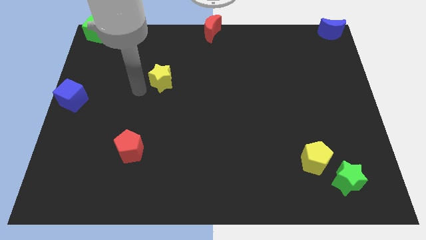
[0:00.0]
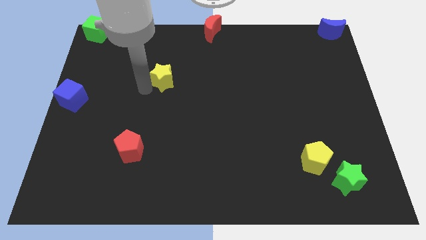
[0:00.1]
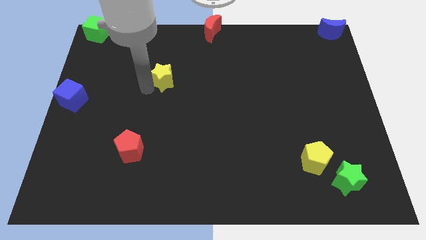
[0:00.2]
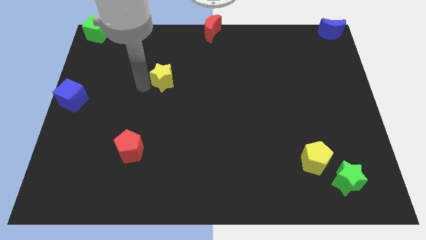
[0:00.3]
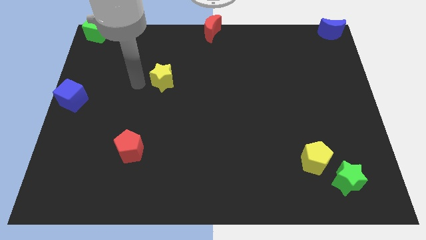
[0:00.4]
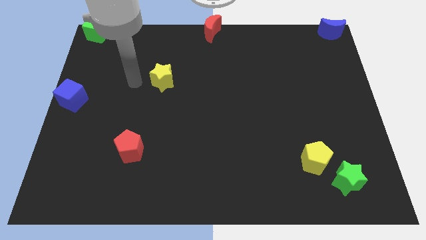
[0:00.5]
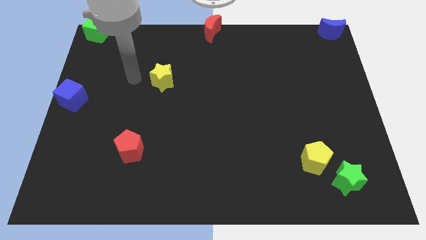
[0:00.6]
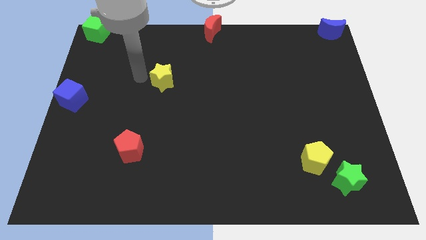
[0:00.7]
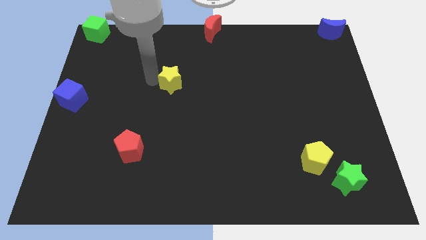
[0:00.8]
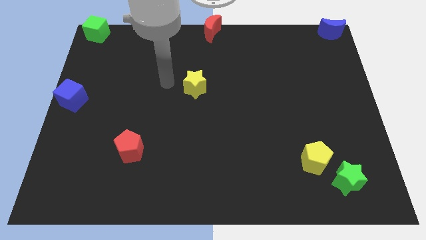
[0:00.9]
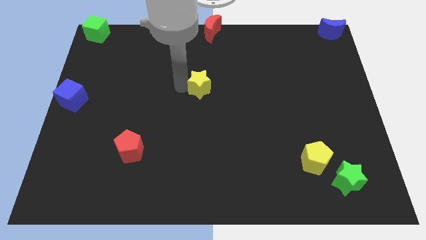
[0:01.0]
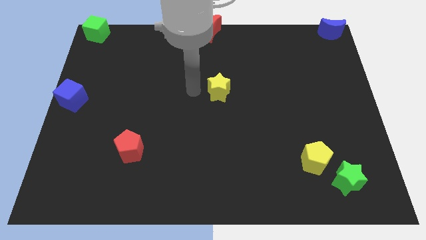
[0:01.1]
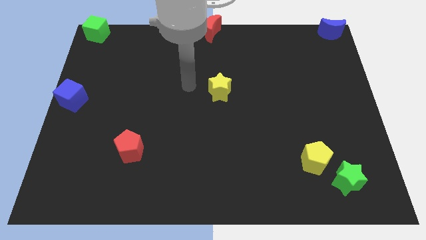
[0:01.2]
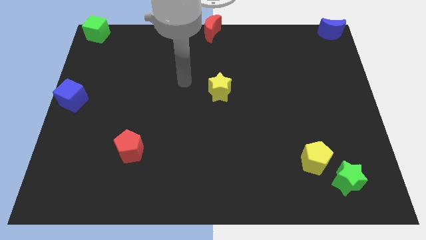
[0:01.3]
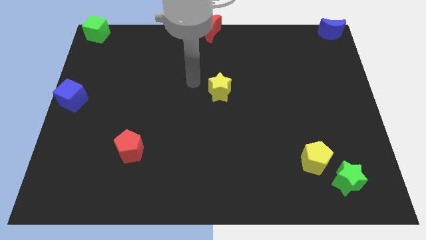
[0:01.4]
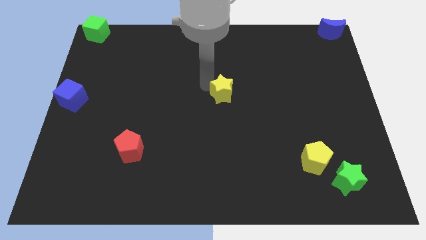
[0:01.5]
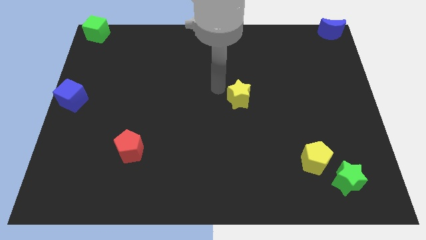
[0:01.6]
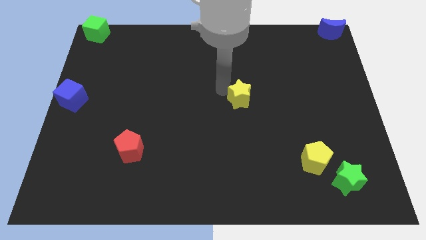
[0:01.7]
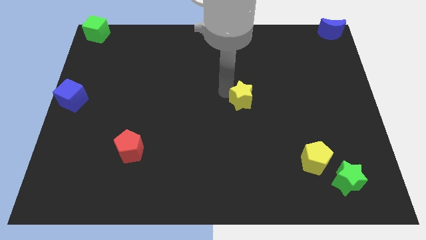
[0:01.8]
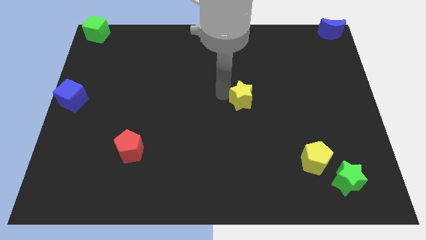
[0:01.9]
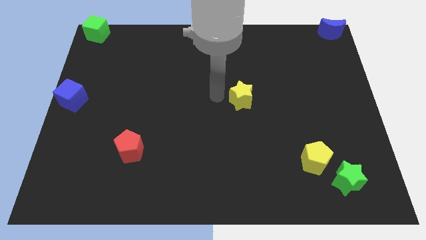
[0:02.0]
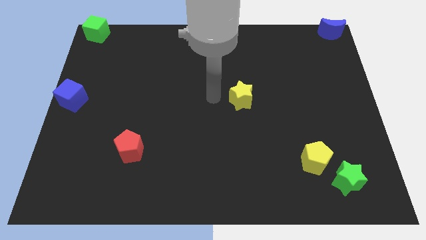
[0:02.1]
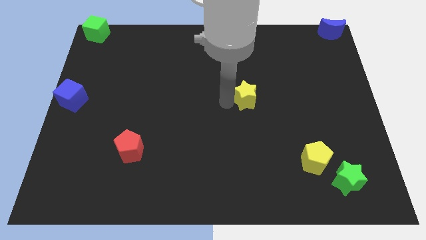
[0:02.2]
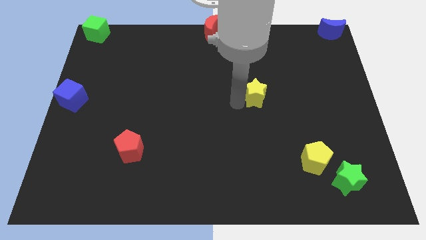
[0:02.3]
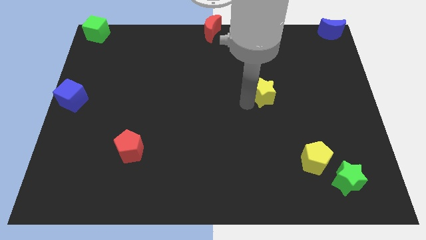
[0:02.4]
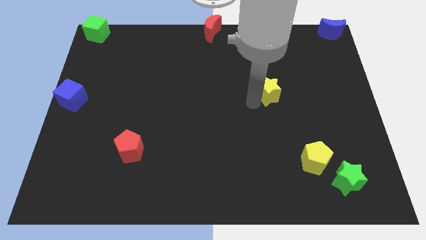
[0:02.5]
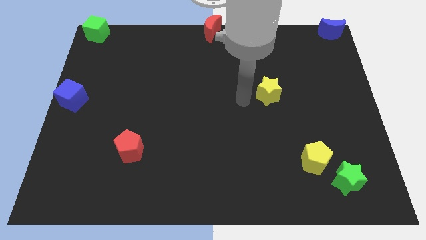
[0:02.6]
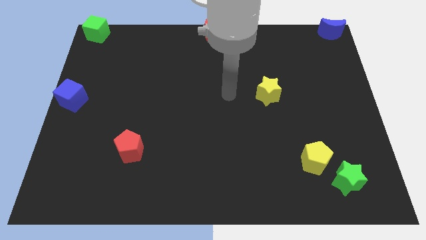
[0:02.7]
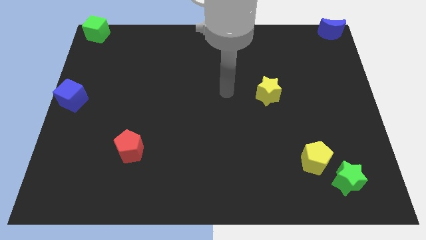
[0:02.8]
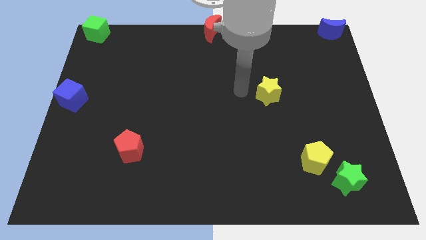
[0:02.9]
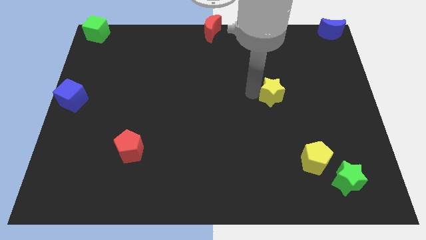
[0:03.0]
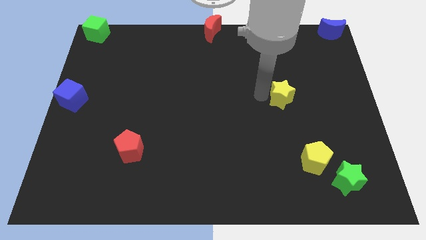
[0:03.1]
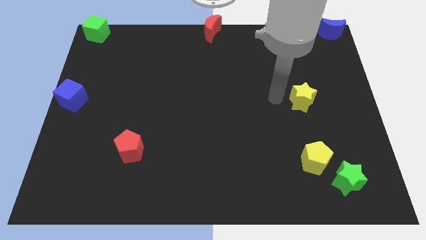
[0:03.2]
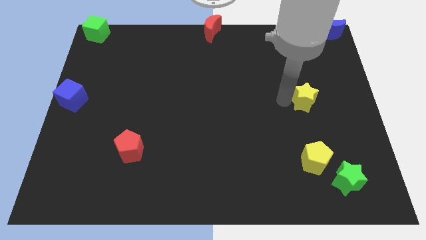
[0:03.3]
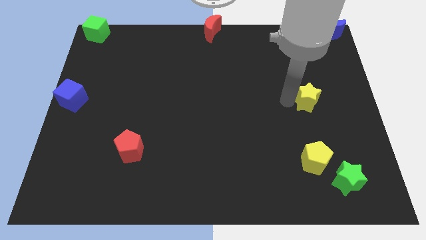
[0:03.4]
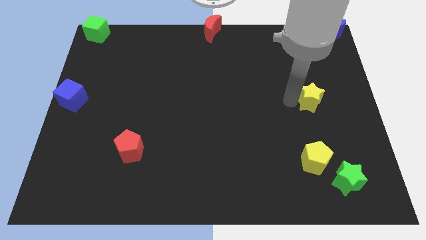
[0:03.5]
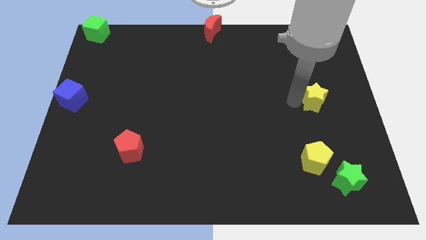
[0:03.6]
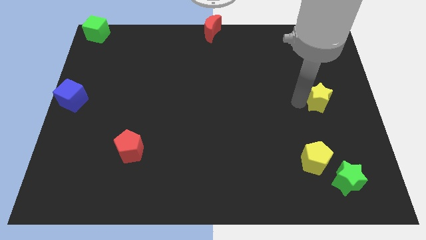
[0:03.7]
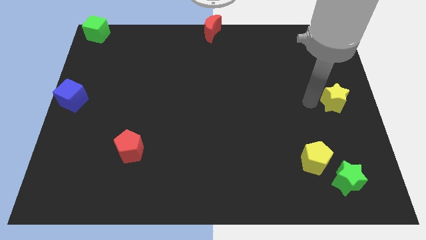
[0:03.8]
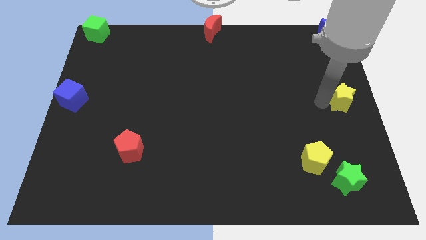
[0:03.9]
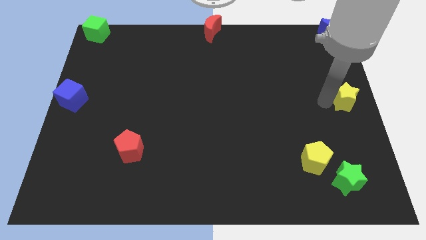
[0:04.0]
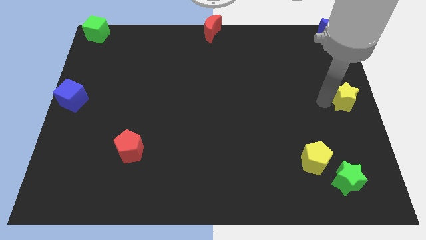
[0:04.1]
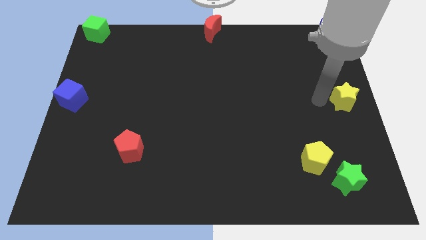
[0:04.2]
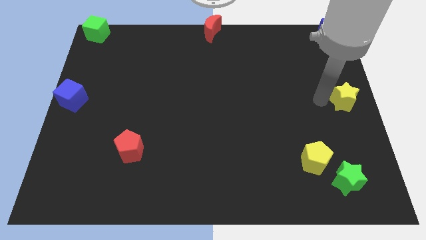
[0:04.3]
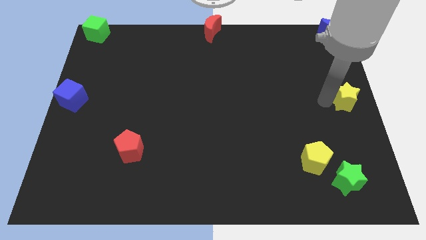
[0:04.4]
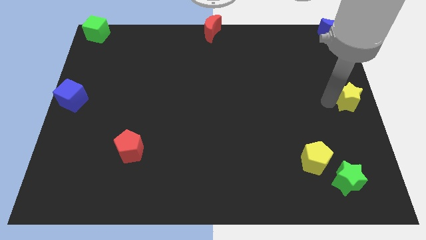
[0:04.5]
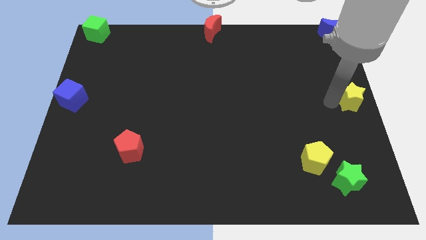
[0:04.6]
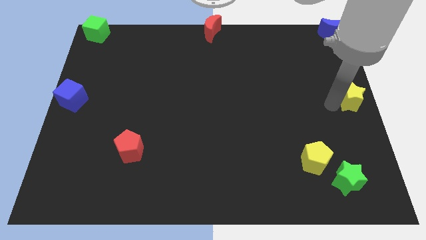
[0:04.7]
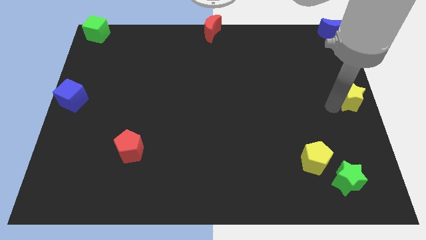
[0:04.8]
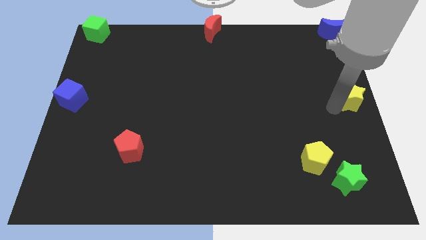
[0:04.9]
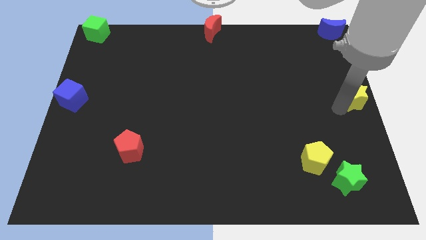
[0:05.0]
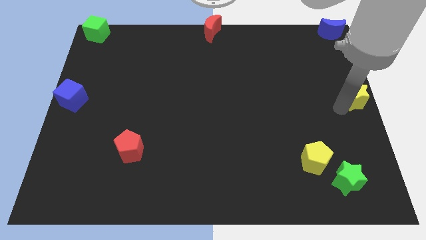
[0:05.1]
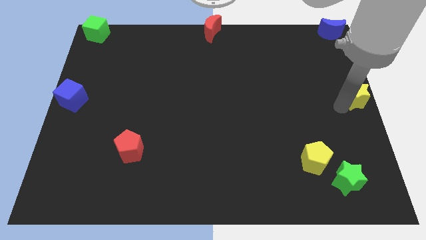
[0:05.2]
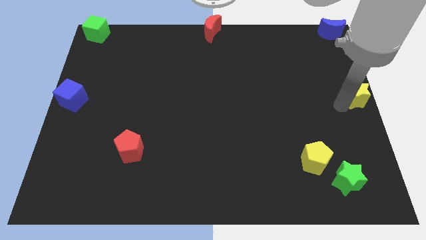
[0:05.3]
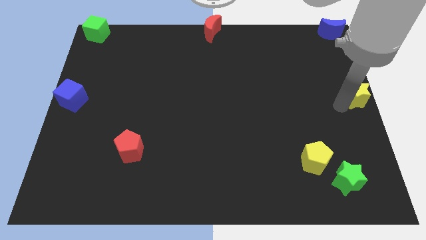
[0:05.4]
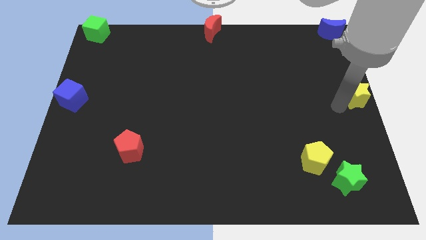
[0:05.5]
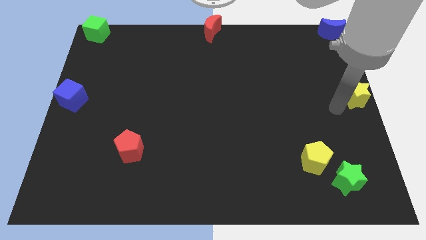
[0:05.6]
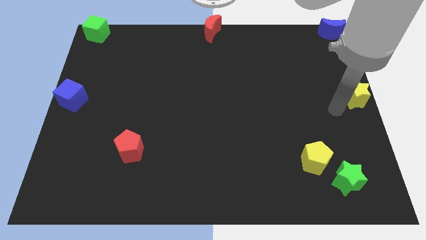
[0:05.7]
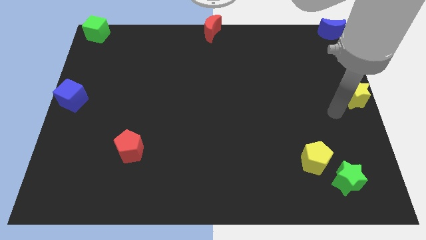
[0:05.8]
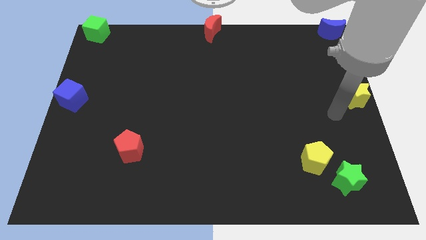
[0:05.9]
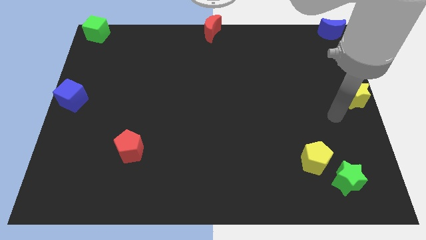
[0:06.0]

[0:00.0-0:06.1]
move the yellow star to the right center

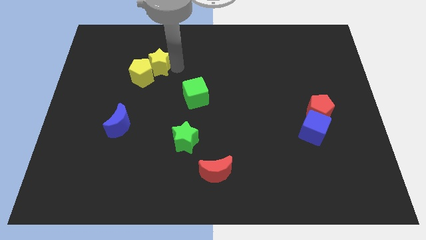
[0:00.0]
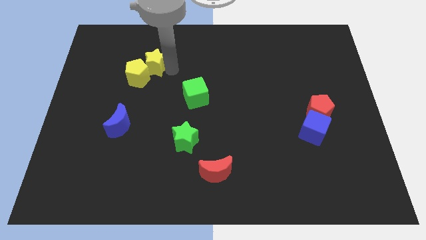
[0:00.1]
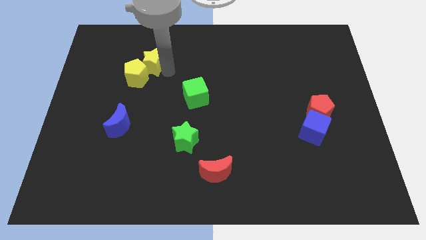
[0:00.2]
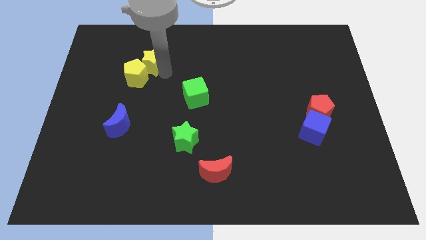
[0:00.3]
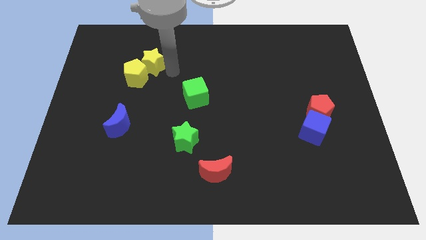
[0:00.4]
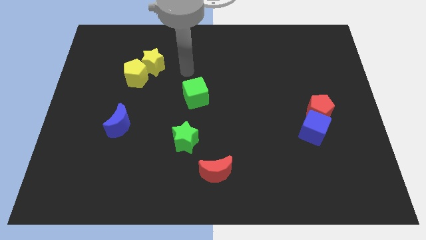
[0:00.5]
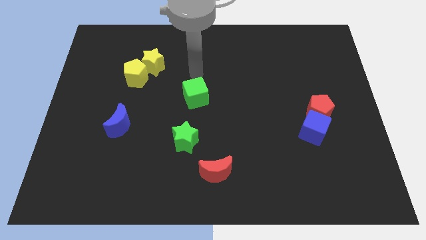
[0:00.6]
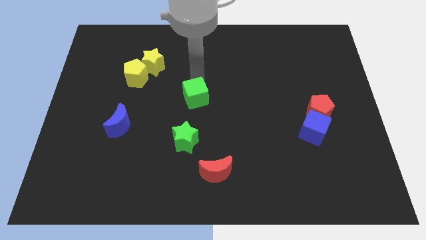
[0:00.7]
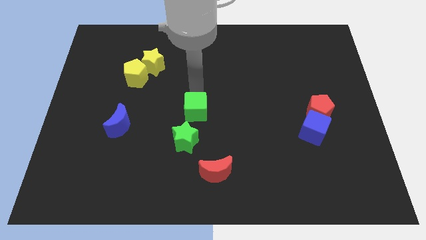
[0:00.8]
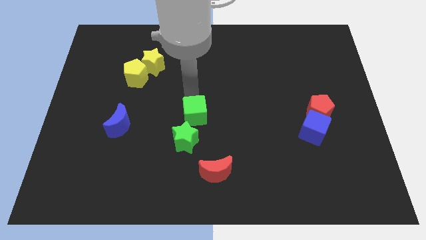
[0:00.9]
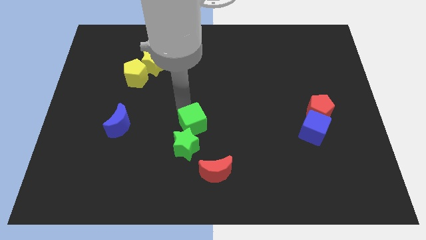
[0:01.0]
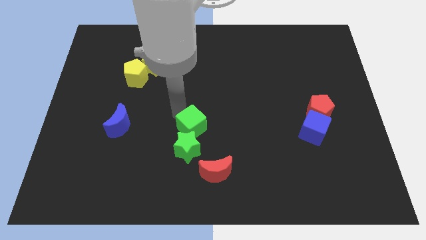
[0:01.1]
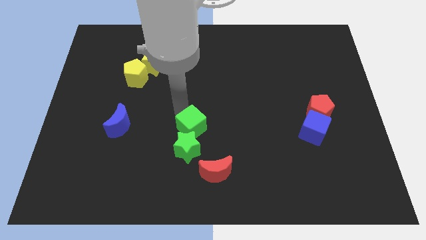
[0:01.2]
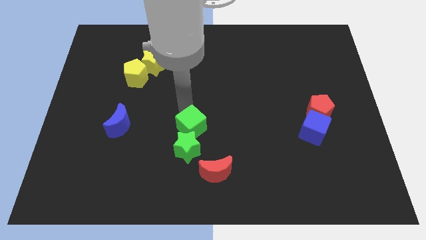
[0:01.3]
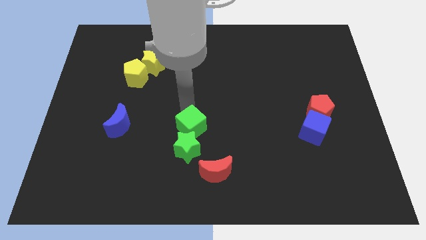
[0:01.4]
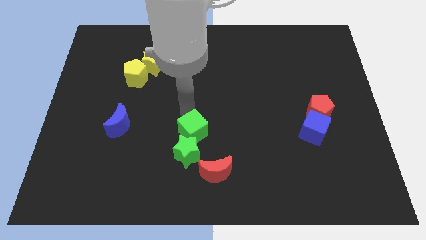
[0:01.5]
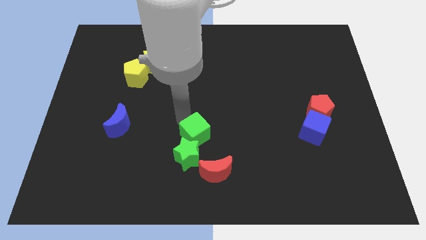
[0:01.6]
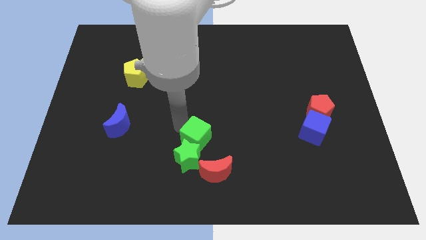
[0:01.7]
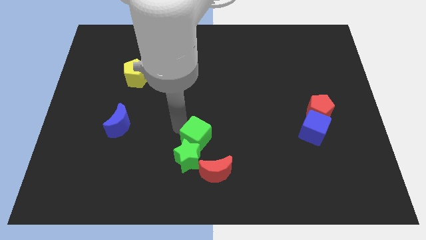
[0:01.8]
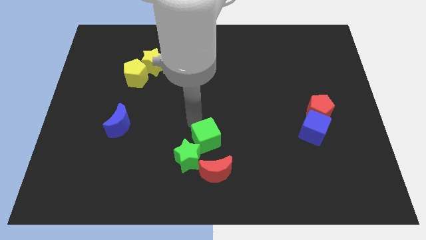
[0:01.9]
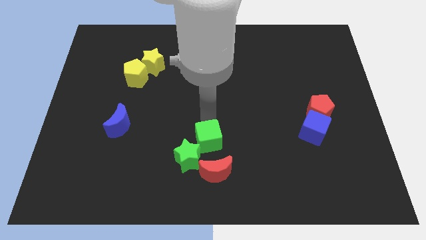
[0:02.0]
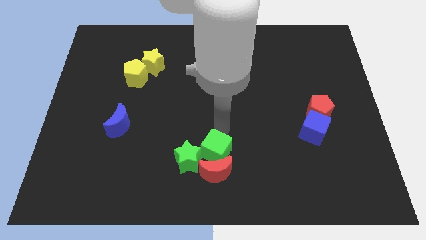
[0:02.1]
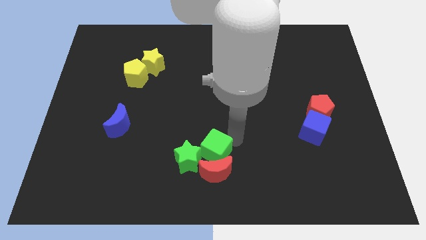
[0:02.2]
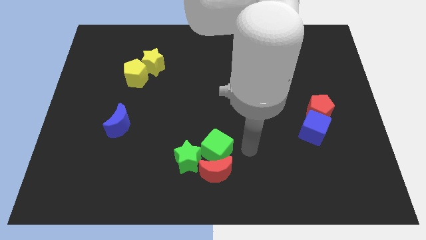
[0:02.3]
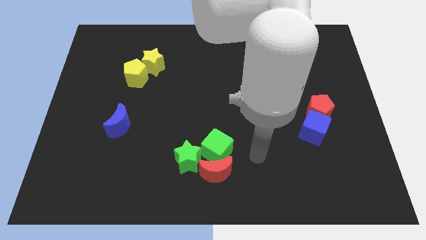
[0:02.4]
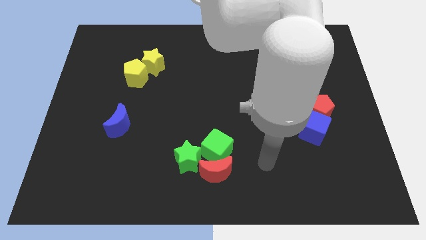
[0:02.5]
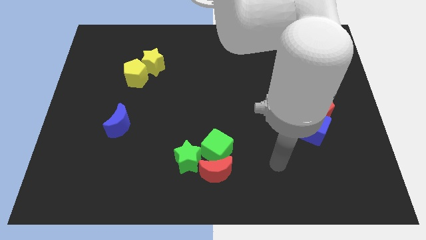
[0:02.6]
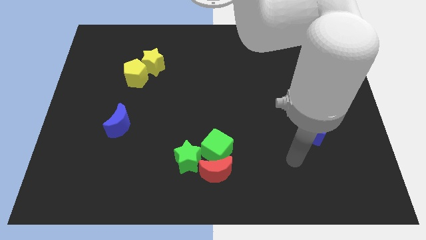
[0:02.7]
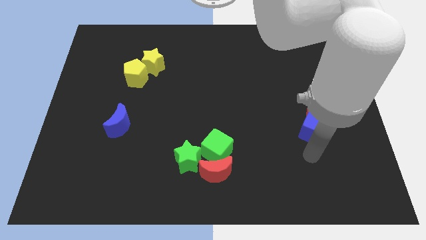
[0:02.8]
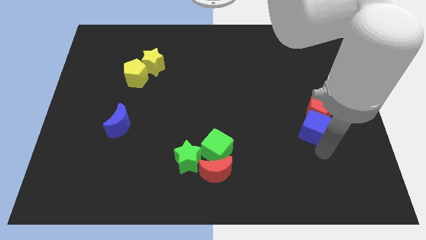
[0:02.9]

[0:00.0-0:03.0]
place the green blocks above to the red moon
